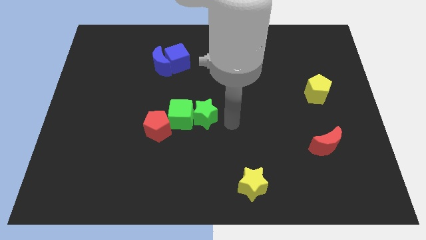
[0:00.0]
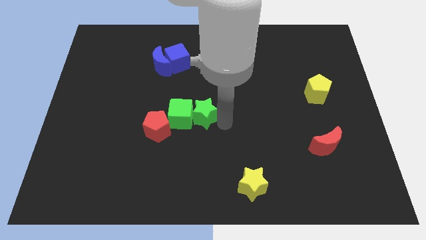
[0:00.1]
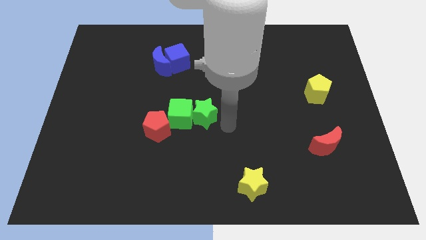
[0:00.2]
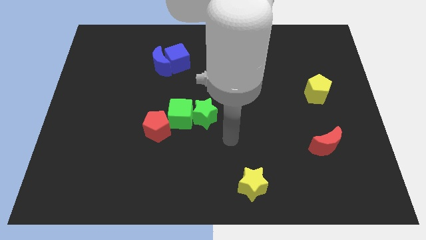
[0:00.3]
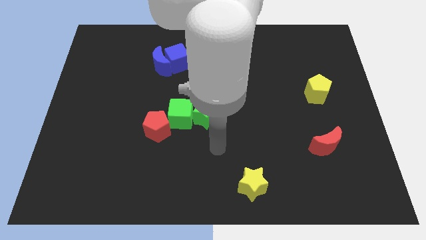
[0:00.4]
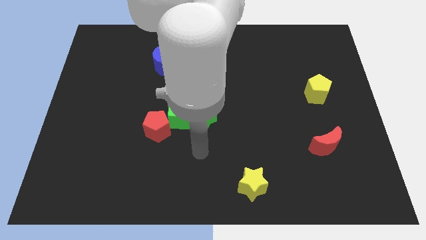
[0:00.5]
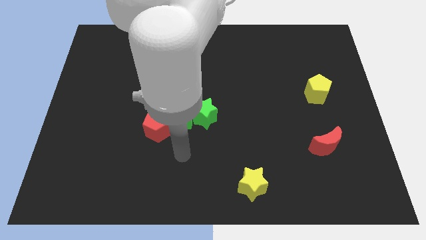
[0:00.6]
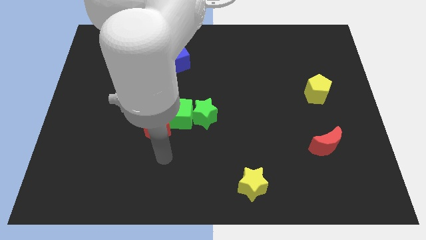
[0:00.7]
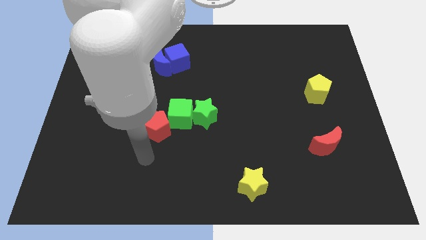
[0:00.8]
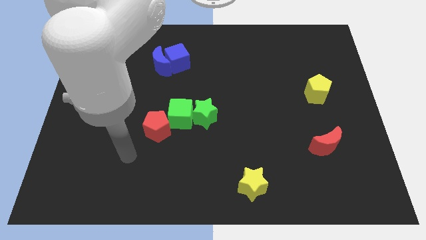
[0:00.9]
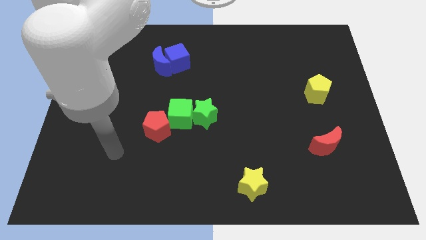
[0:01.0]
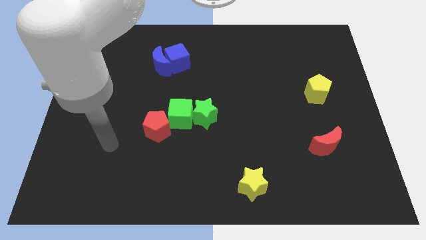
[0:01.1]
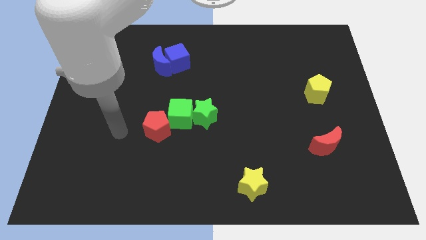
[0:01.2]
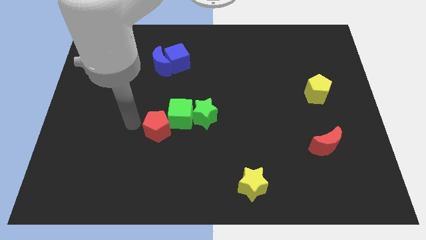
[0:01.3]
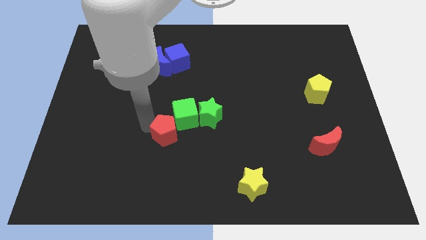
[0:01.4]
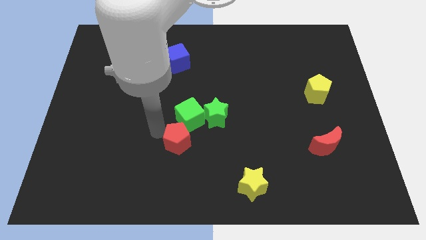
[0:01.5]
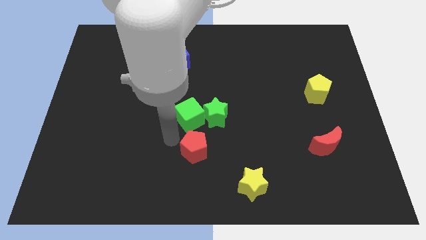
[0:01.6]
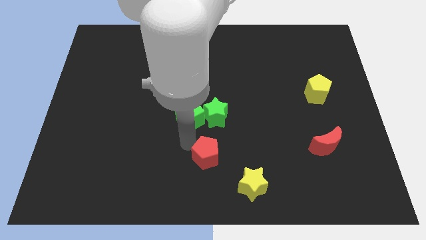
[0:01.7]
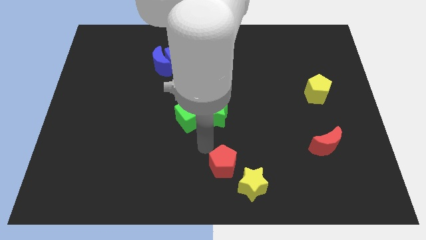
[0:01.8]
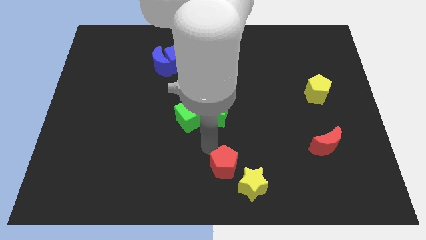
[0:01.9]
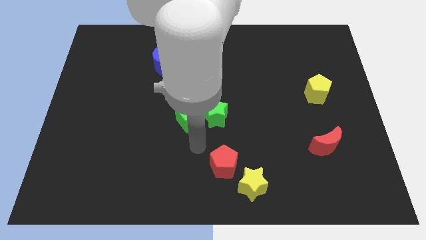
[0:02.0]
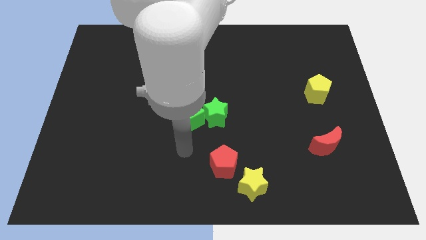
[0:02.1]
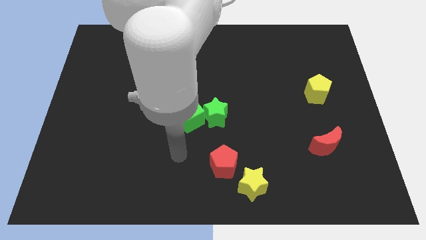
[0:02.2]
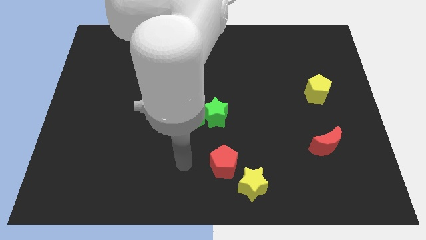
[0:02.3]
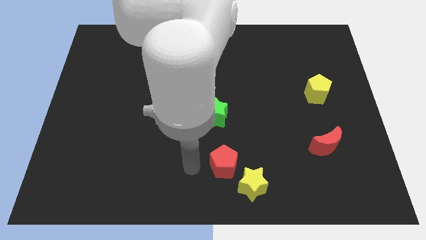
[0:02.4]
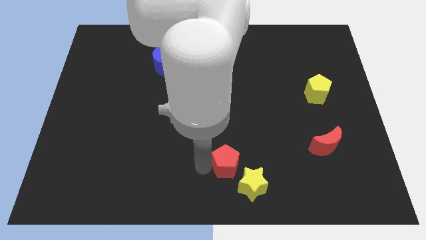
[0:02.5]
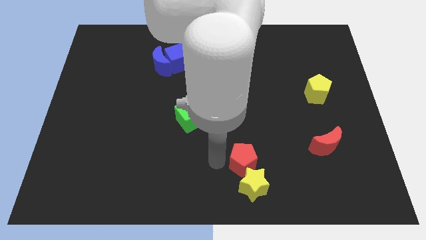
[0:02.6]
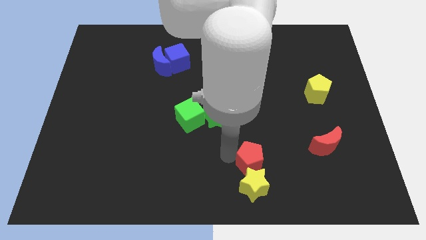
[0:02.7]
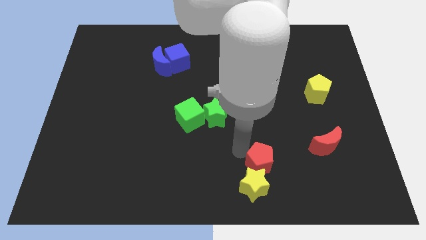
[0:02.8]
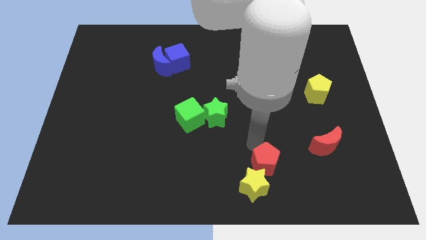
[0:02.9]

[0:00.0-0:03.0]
push the red pentagon into the yellow star

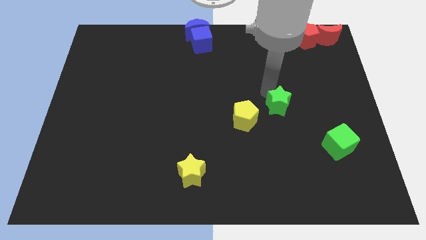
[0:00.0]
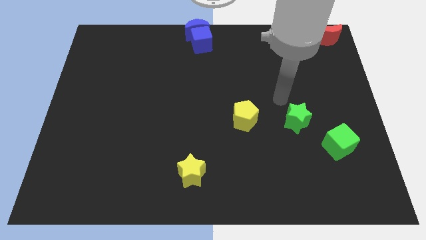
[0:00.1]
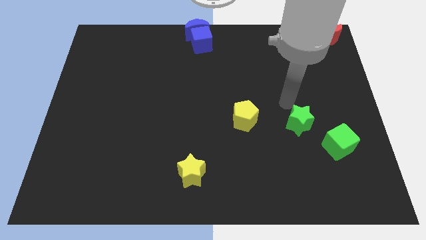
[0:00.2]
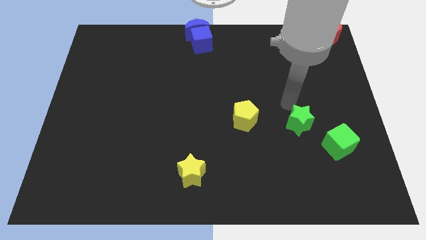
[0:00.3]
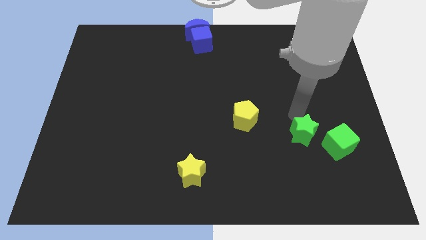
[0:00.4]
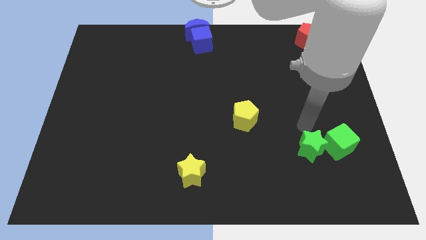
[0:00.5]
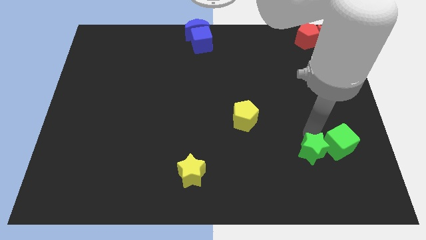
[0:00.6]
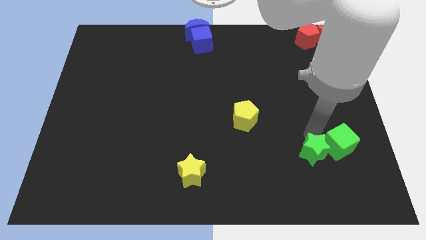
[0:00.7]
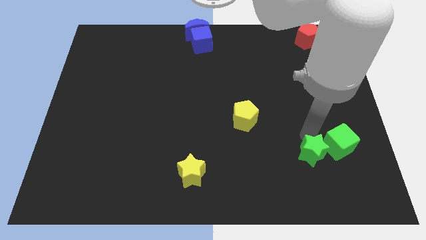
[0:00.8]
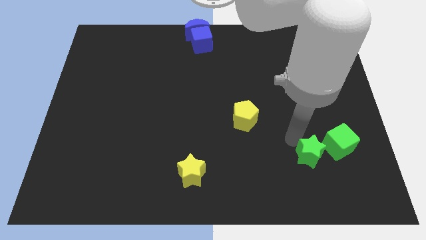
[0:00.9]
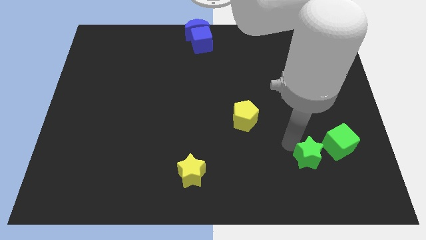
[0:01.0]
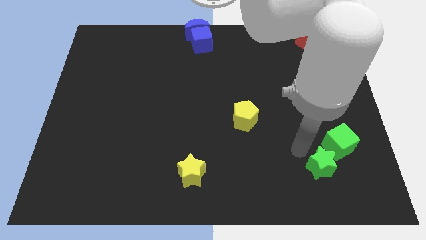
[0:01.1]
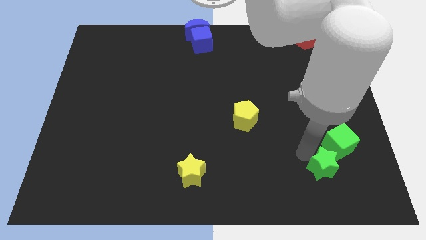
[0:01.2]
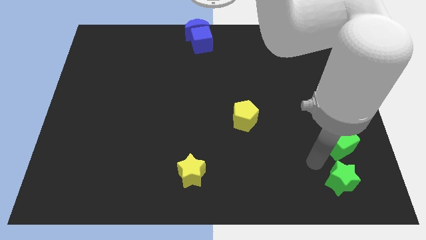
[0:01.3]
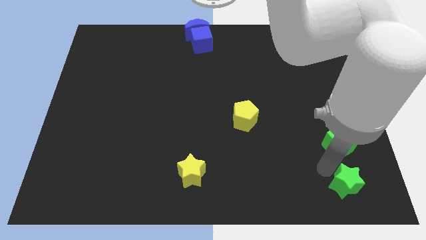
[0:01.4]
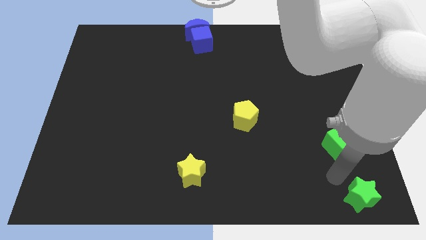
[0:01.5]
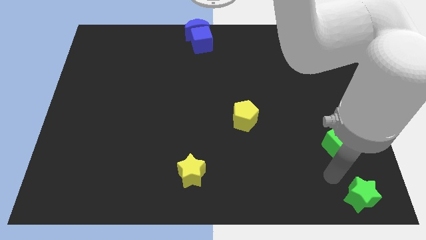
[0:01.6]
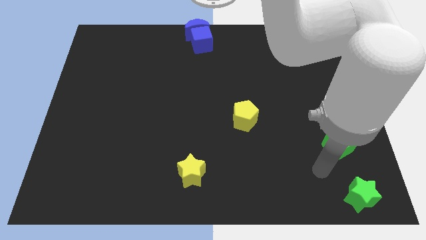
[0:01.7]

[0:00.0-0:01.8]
slide green star to the bottom right of the board

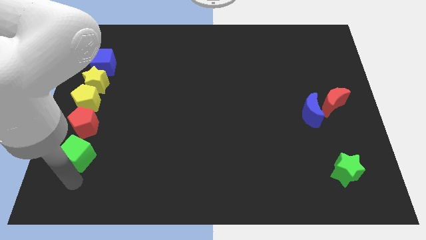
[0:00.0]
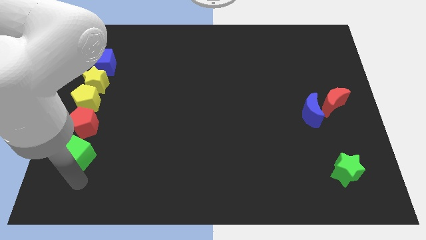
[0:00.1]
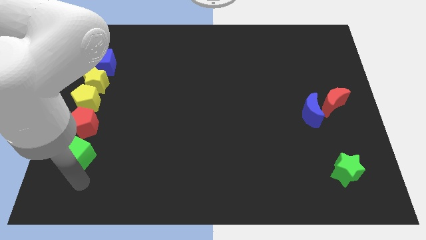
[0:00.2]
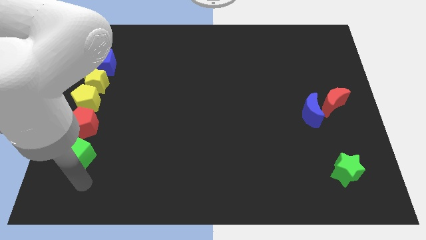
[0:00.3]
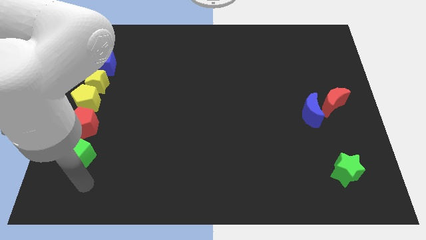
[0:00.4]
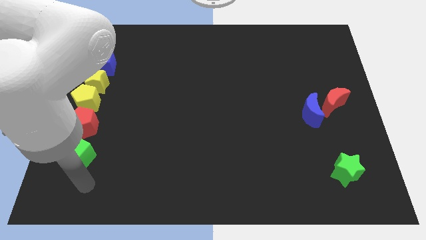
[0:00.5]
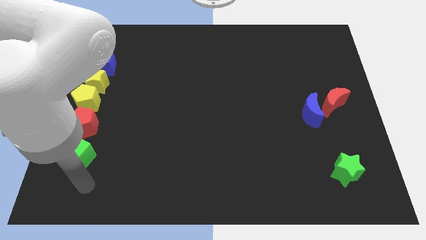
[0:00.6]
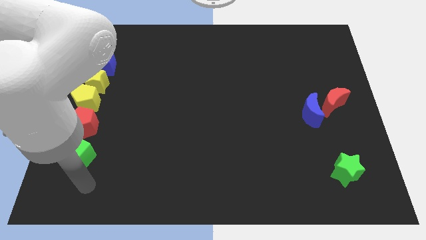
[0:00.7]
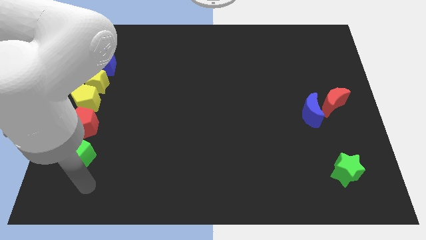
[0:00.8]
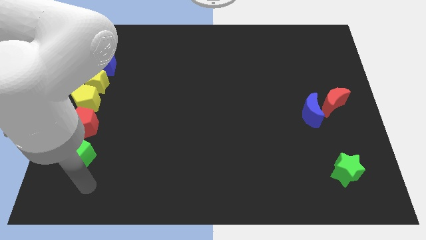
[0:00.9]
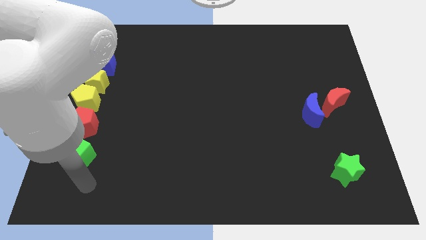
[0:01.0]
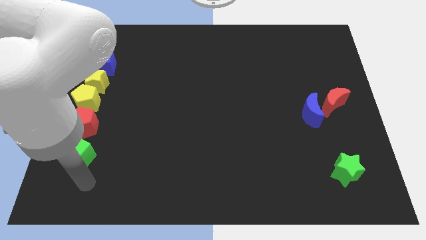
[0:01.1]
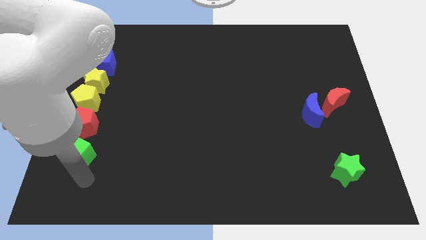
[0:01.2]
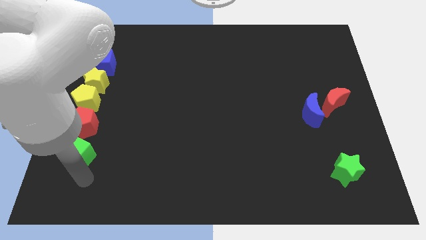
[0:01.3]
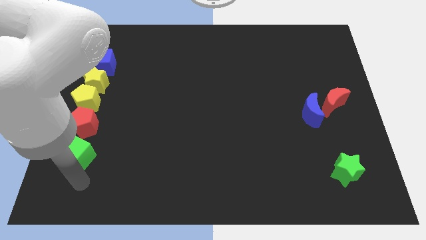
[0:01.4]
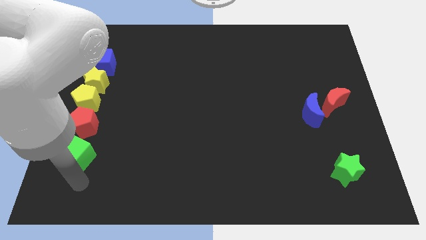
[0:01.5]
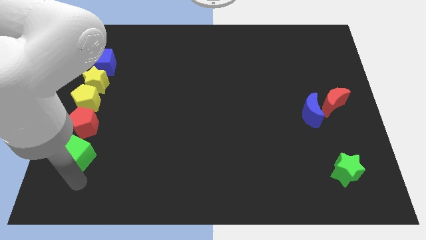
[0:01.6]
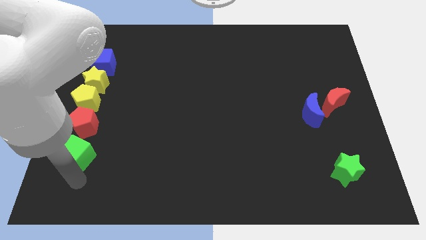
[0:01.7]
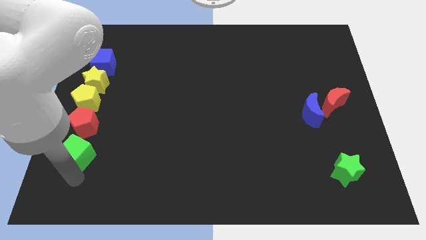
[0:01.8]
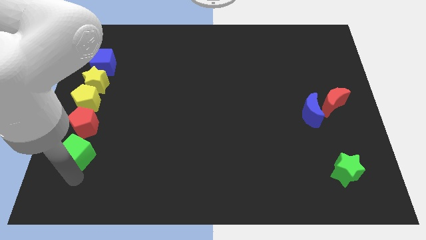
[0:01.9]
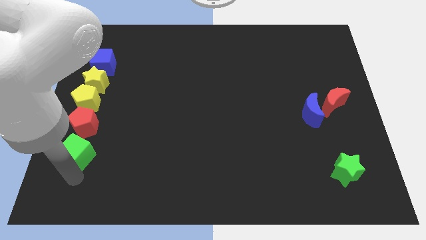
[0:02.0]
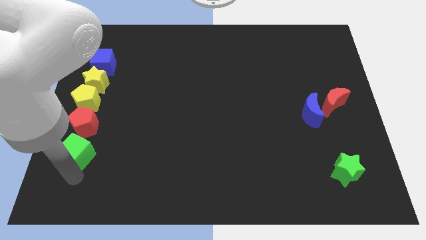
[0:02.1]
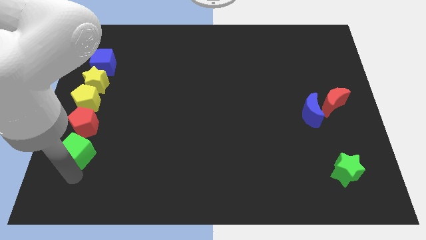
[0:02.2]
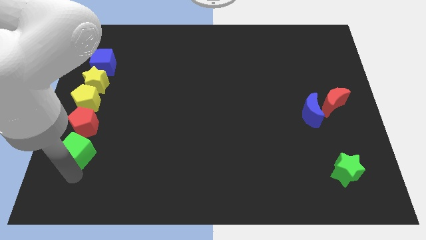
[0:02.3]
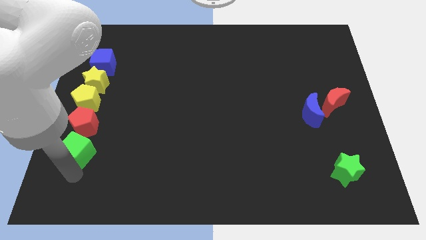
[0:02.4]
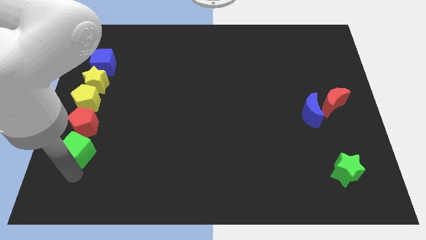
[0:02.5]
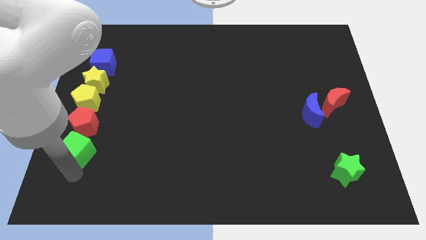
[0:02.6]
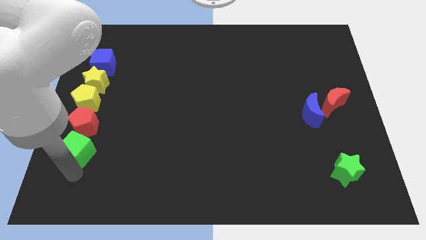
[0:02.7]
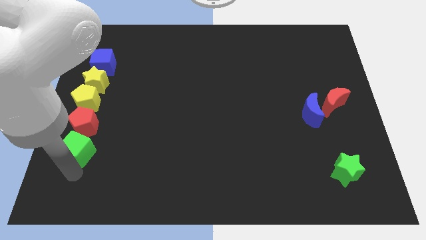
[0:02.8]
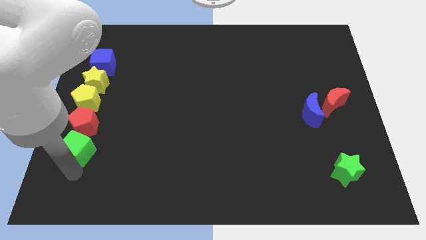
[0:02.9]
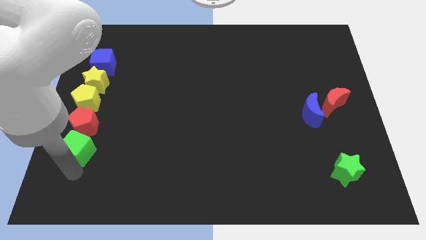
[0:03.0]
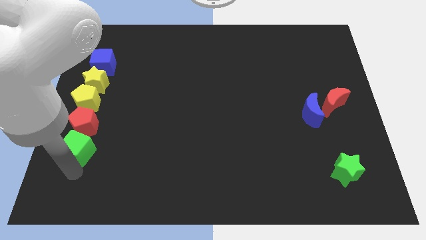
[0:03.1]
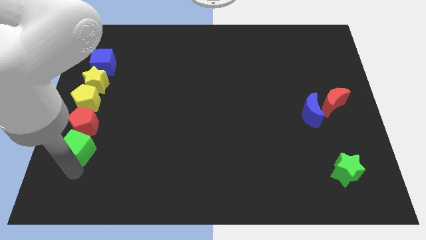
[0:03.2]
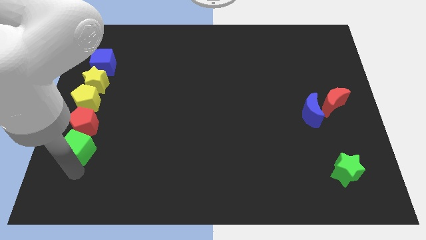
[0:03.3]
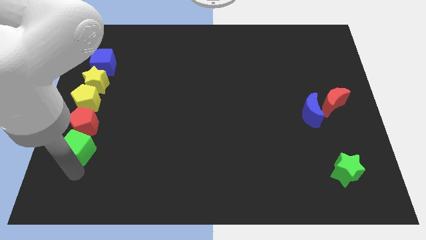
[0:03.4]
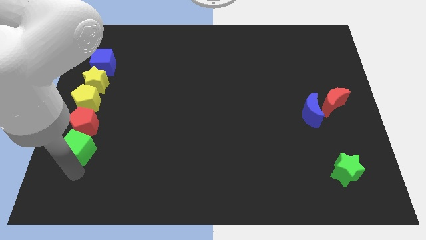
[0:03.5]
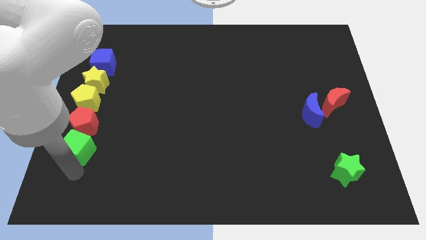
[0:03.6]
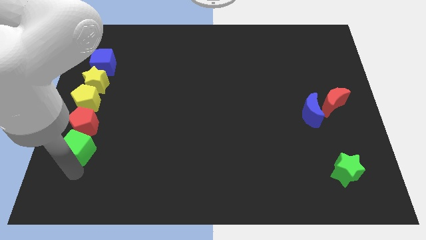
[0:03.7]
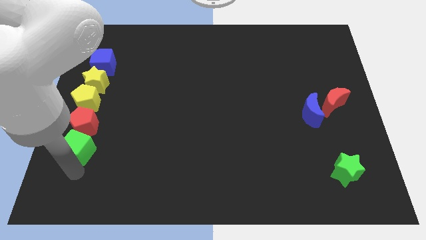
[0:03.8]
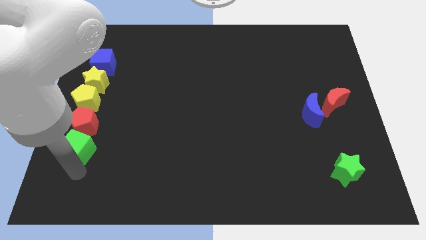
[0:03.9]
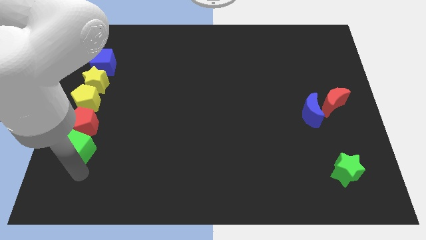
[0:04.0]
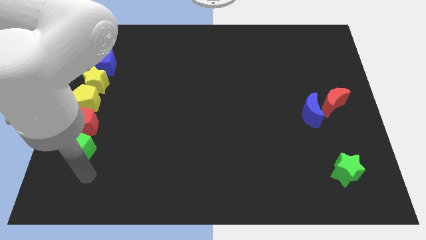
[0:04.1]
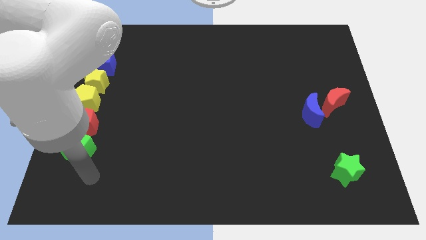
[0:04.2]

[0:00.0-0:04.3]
move the green cube into the red pentagon
